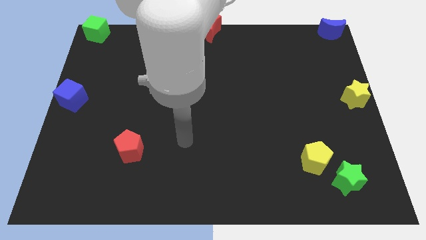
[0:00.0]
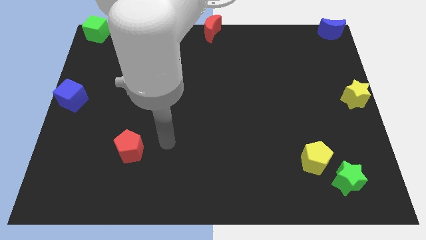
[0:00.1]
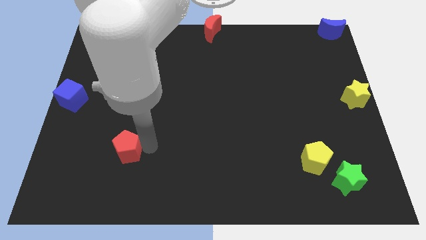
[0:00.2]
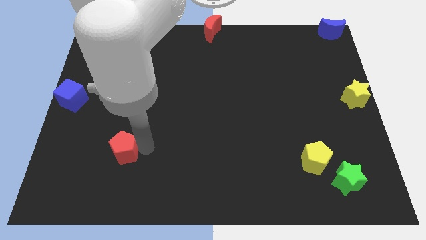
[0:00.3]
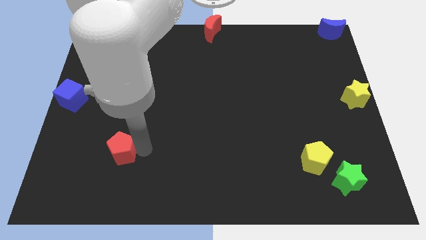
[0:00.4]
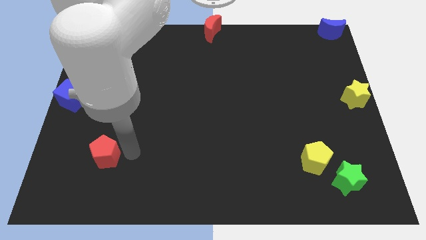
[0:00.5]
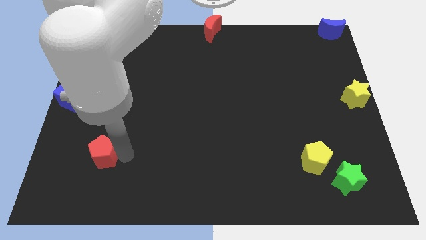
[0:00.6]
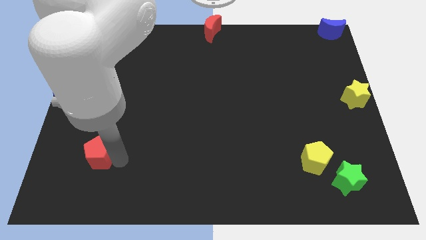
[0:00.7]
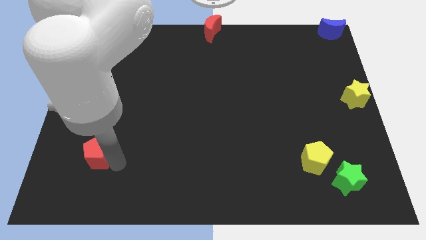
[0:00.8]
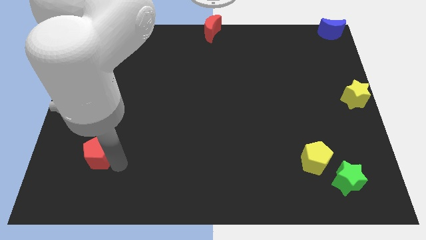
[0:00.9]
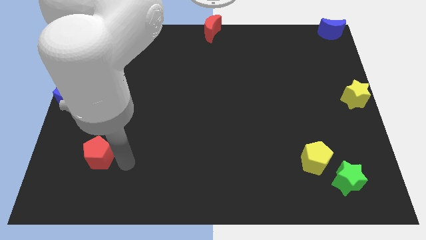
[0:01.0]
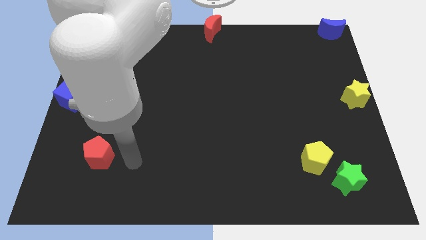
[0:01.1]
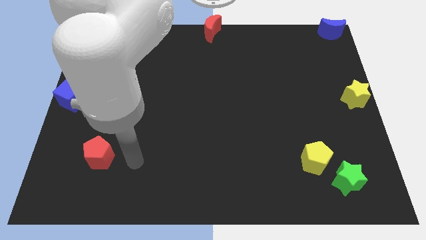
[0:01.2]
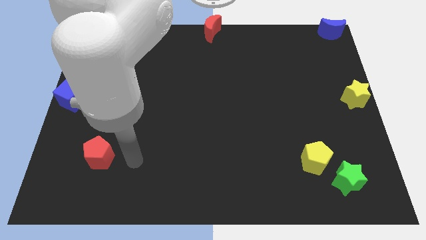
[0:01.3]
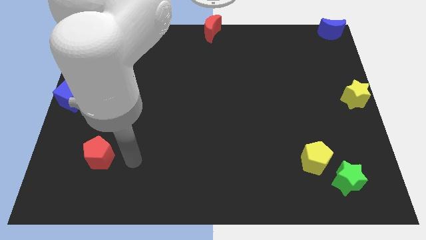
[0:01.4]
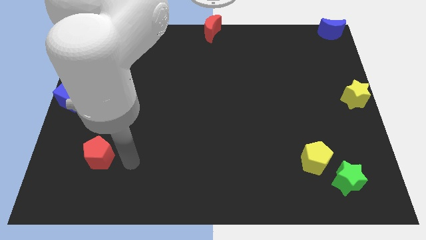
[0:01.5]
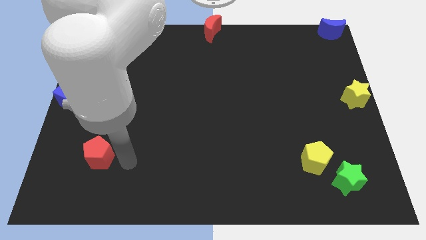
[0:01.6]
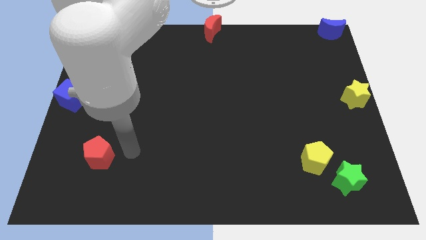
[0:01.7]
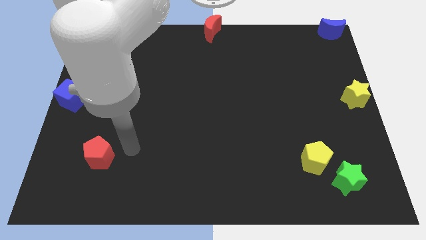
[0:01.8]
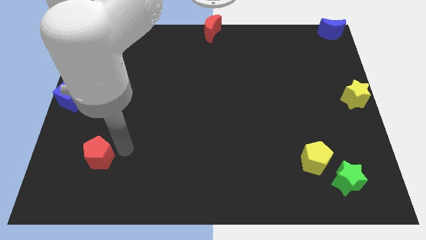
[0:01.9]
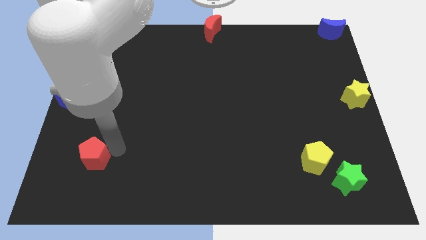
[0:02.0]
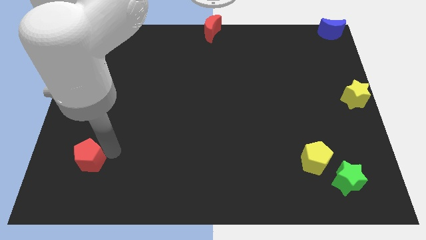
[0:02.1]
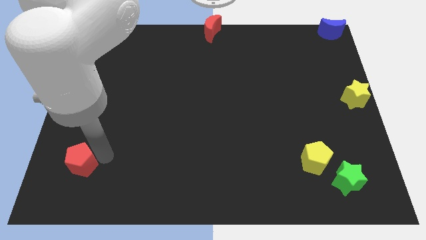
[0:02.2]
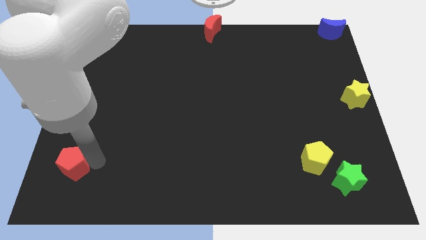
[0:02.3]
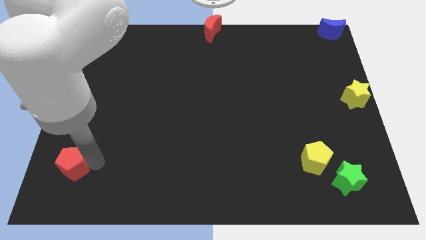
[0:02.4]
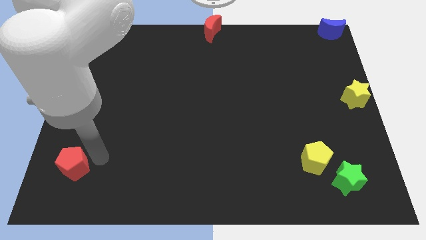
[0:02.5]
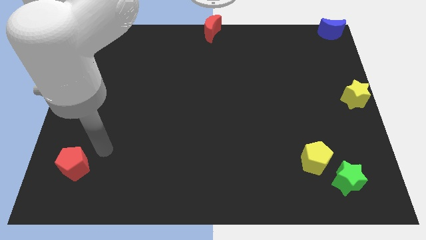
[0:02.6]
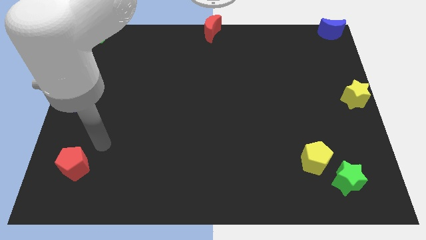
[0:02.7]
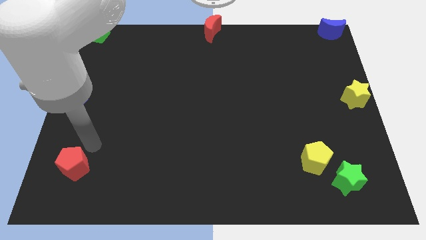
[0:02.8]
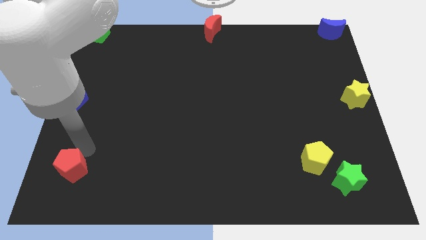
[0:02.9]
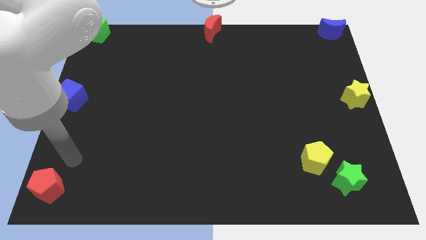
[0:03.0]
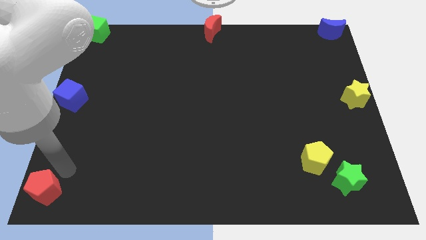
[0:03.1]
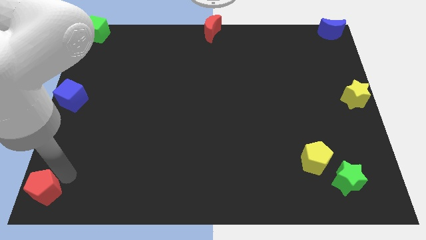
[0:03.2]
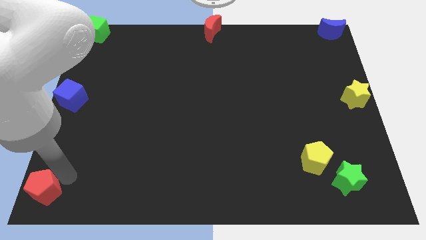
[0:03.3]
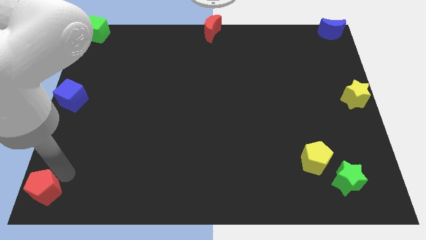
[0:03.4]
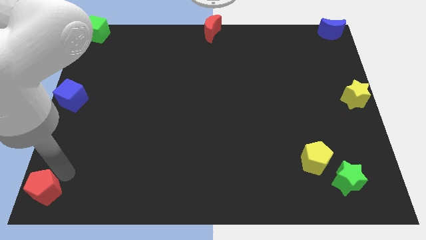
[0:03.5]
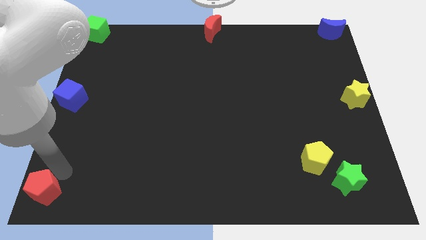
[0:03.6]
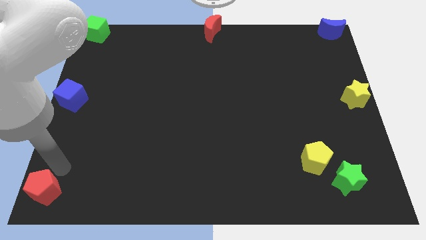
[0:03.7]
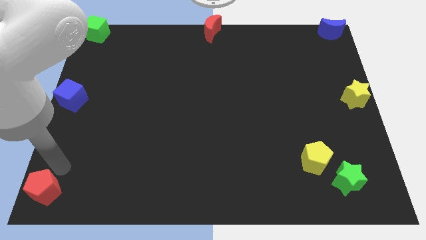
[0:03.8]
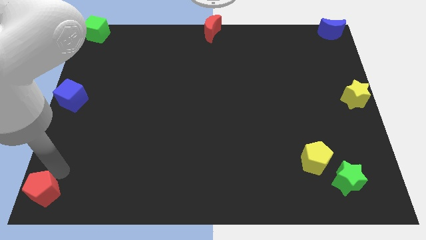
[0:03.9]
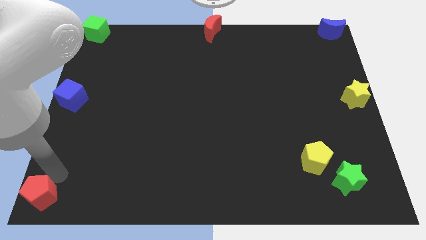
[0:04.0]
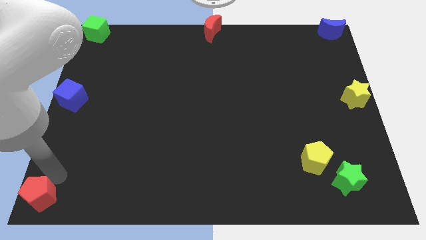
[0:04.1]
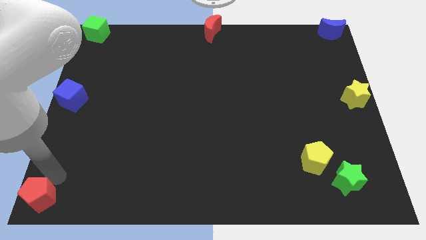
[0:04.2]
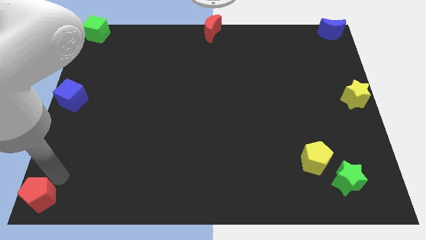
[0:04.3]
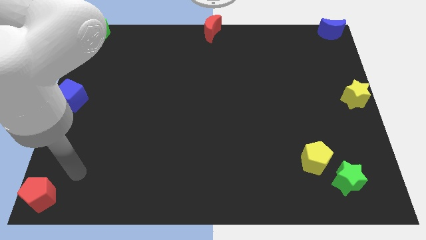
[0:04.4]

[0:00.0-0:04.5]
move the red penatgon to the bottom left corner

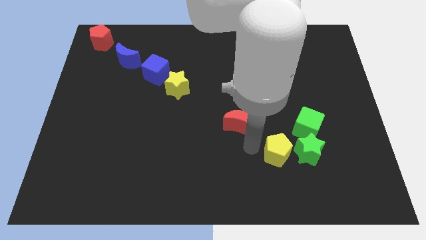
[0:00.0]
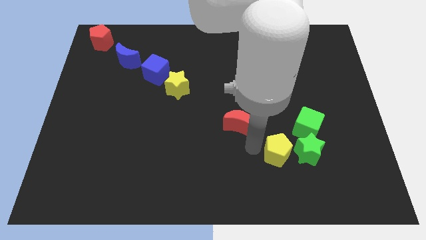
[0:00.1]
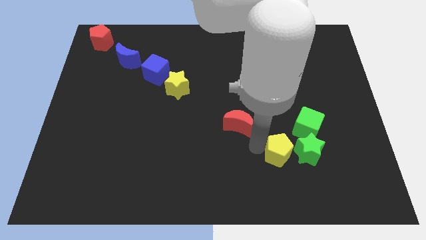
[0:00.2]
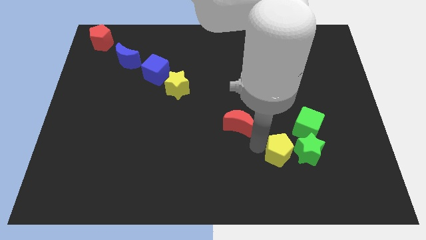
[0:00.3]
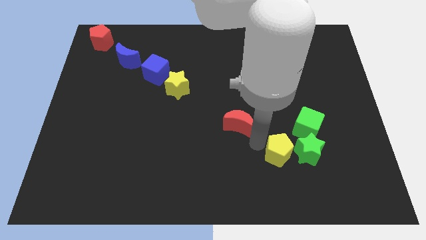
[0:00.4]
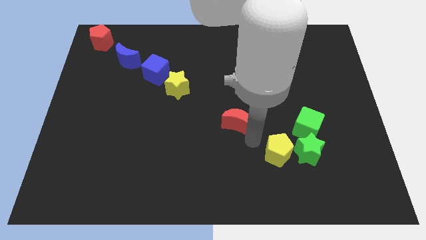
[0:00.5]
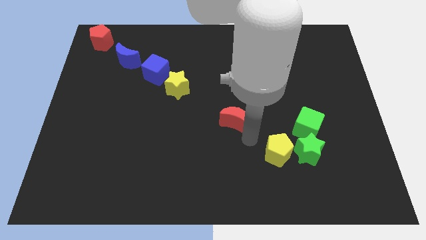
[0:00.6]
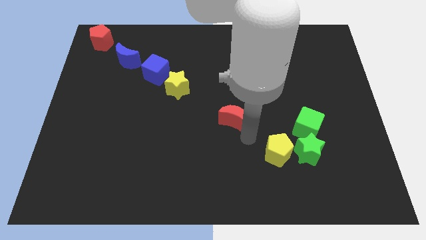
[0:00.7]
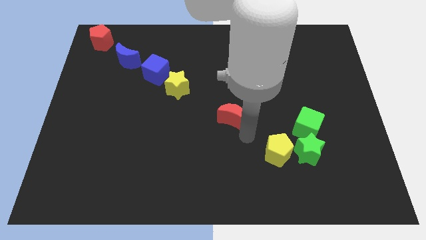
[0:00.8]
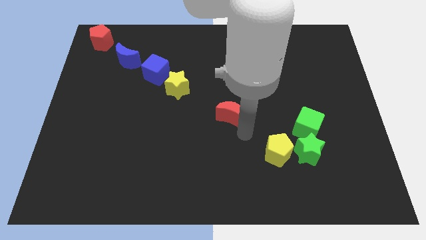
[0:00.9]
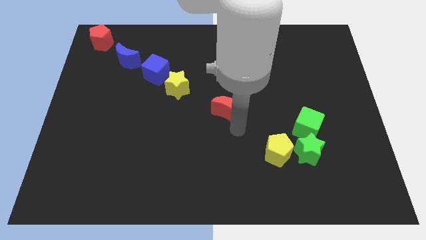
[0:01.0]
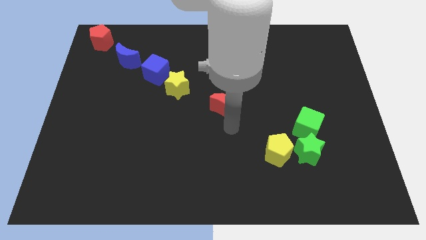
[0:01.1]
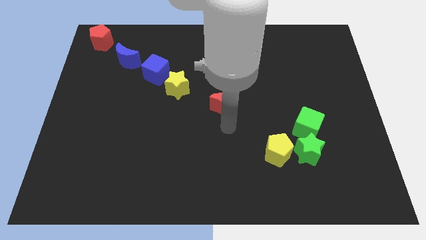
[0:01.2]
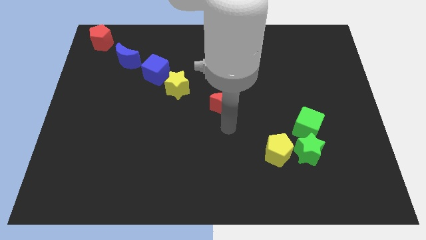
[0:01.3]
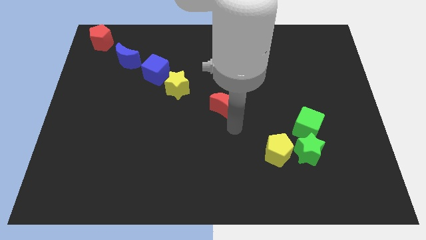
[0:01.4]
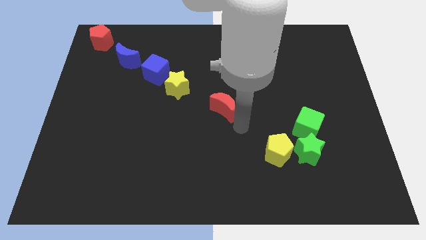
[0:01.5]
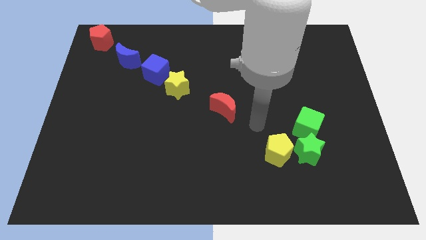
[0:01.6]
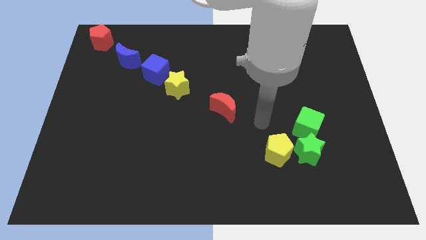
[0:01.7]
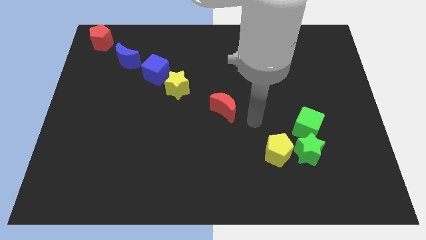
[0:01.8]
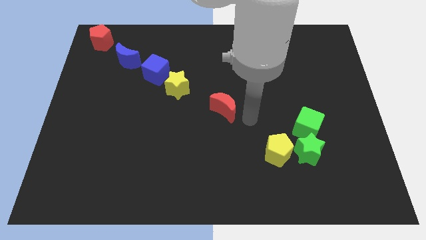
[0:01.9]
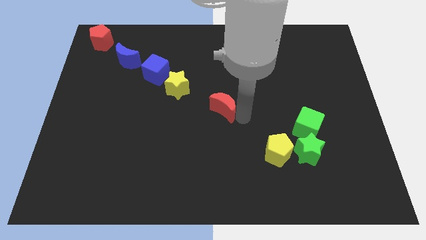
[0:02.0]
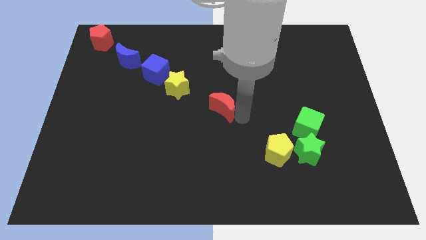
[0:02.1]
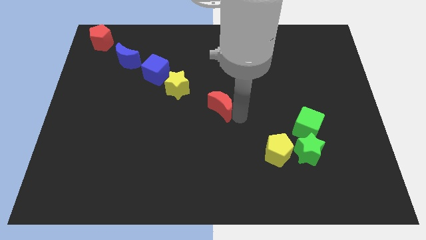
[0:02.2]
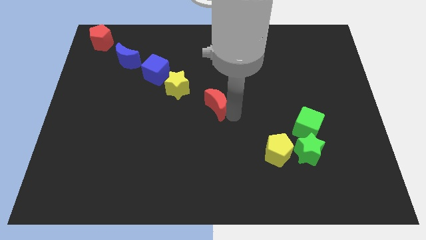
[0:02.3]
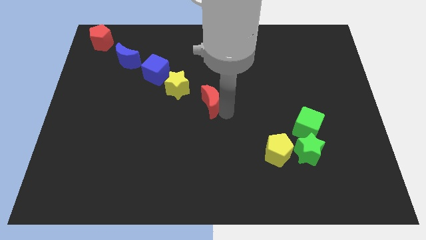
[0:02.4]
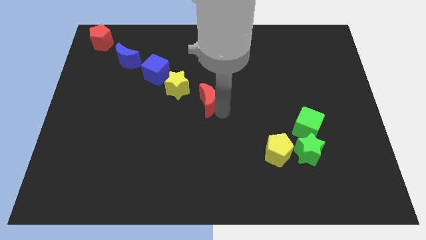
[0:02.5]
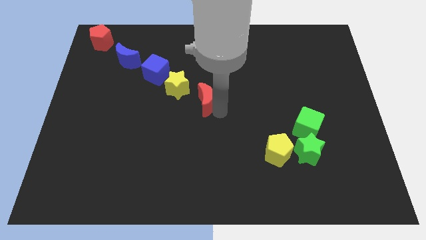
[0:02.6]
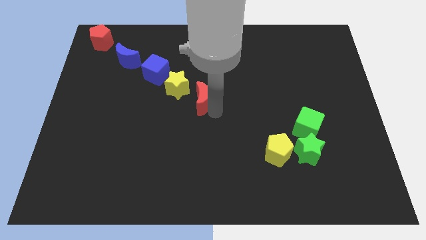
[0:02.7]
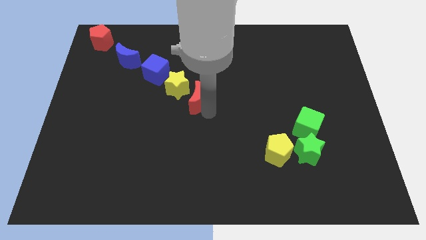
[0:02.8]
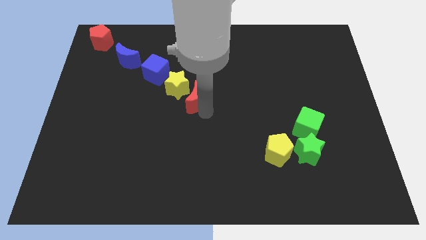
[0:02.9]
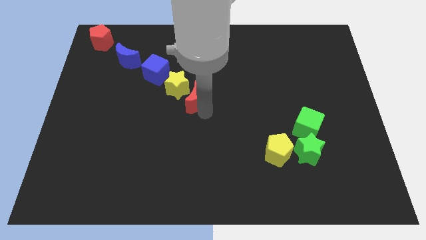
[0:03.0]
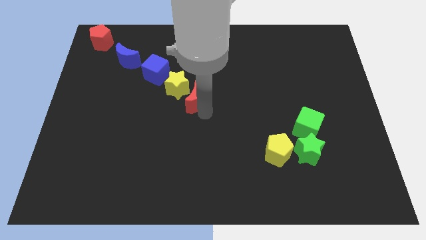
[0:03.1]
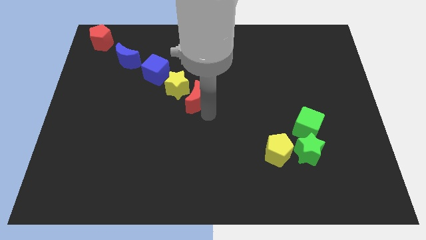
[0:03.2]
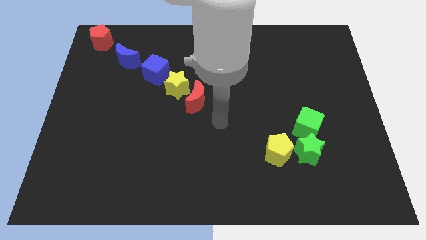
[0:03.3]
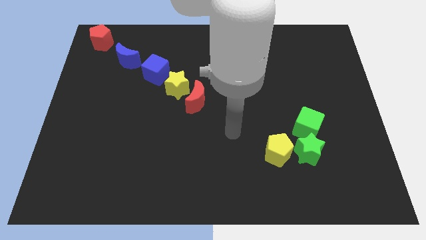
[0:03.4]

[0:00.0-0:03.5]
move the red crescent close to the yellow star

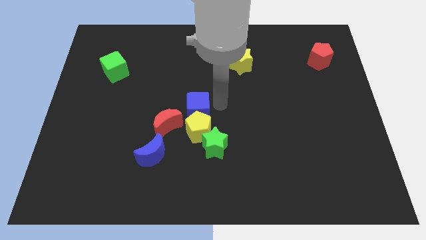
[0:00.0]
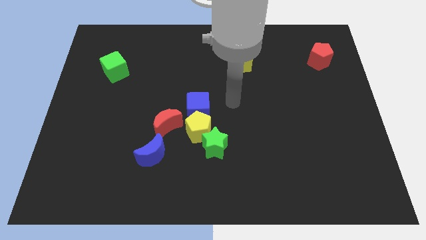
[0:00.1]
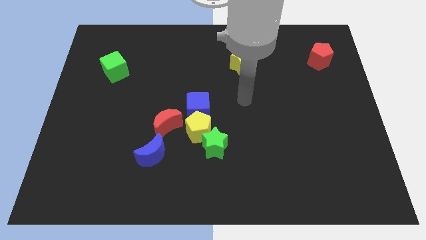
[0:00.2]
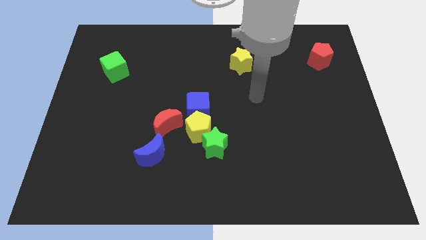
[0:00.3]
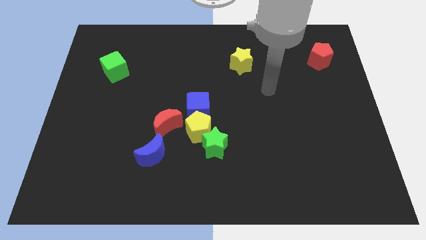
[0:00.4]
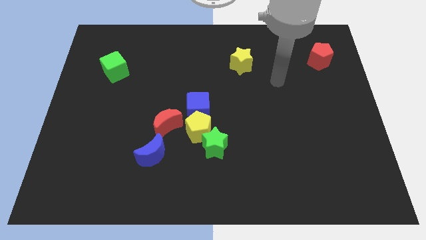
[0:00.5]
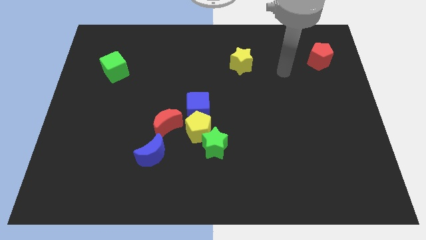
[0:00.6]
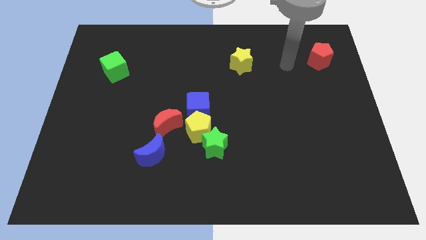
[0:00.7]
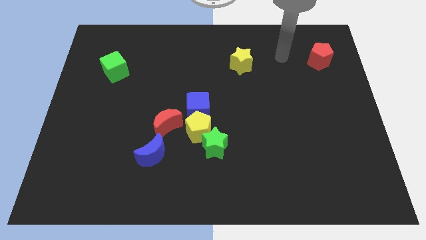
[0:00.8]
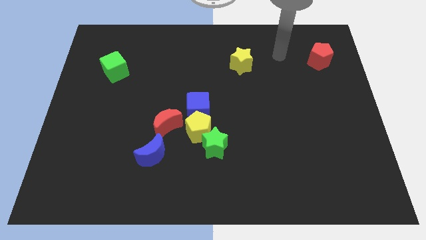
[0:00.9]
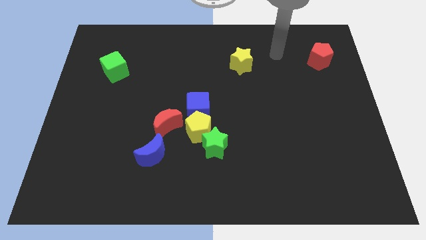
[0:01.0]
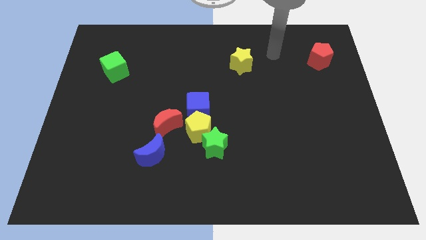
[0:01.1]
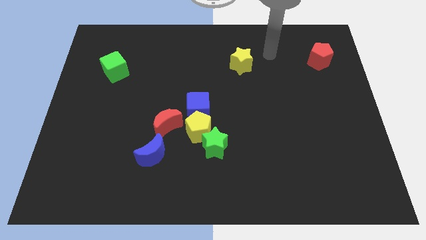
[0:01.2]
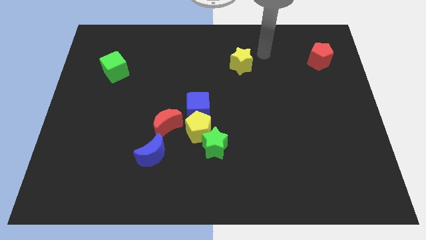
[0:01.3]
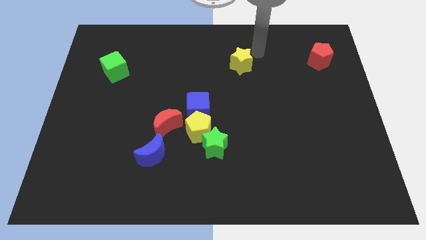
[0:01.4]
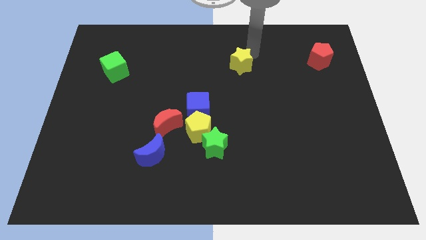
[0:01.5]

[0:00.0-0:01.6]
move your arm away from the blue cube
